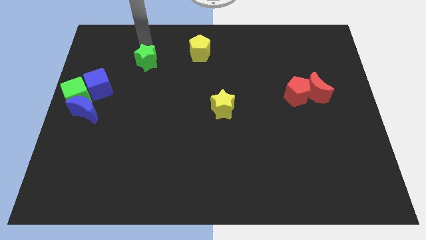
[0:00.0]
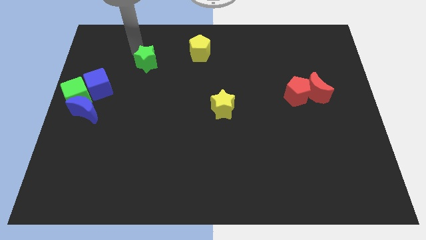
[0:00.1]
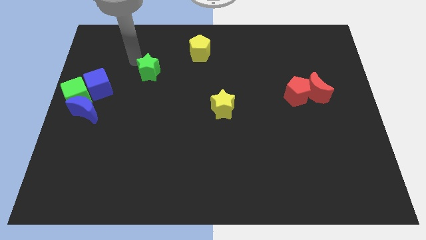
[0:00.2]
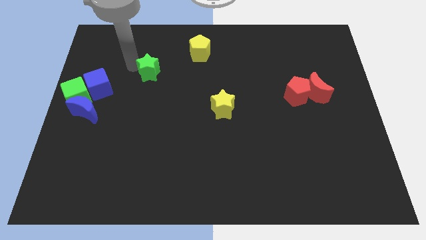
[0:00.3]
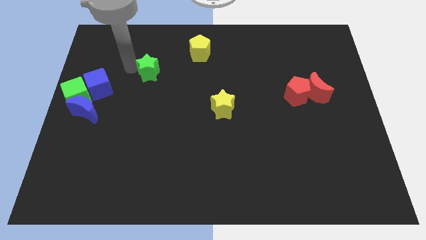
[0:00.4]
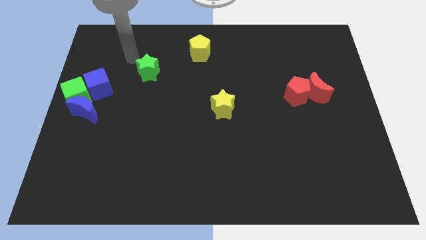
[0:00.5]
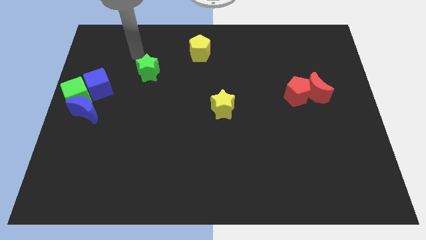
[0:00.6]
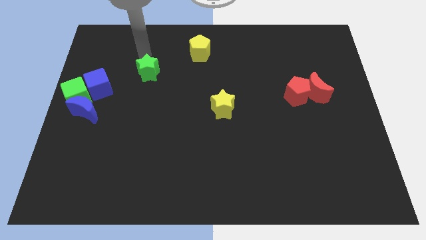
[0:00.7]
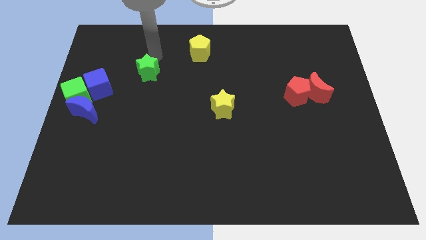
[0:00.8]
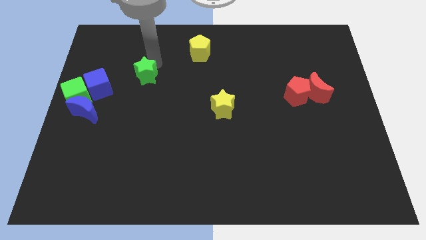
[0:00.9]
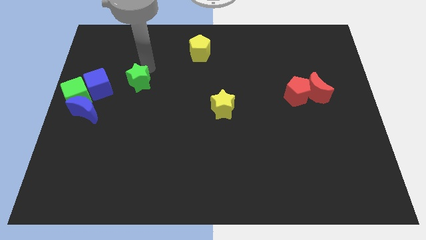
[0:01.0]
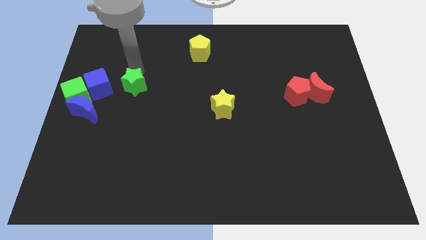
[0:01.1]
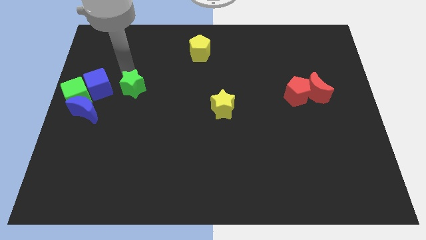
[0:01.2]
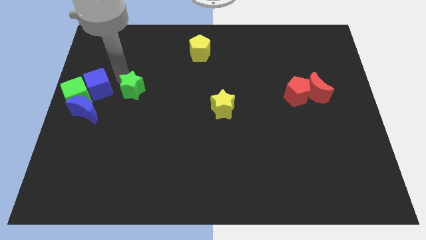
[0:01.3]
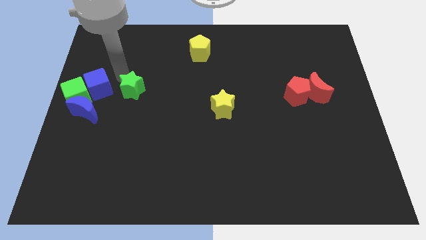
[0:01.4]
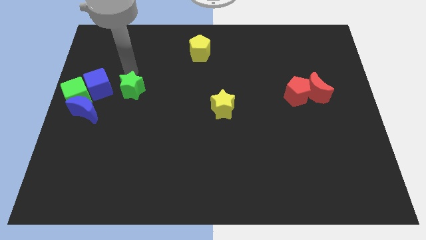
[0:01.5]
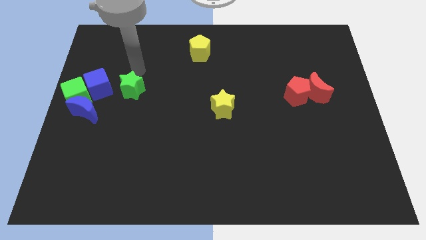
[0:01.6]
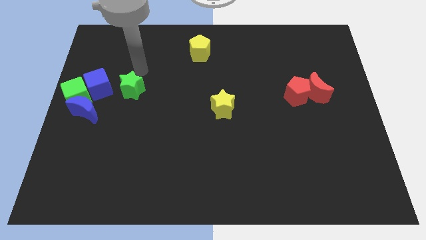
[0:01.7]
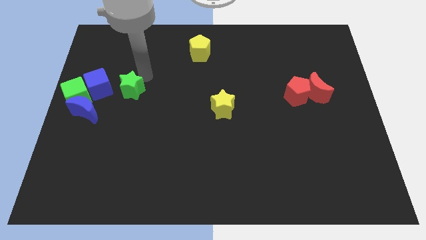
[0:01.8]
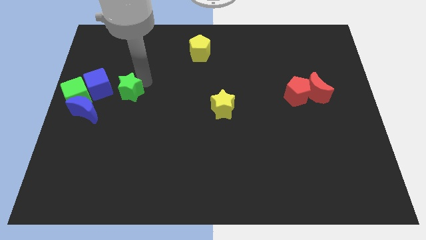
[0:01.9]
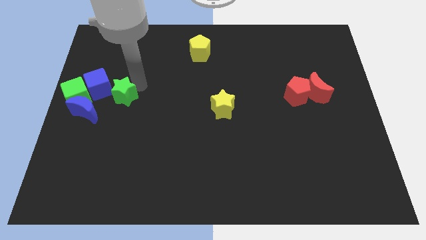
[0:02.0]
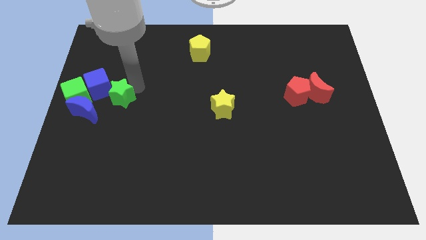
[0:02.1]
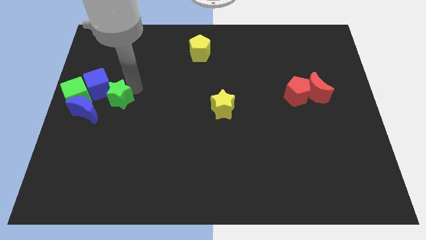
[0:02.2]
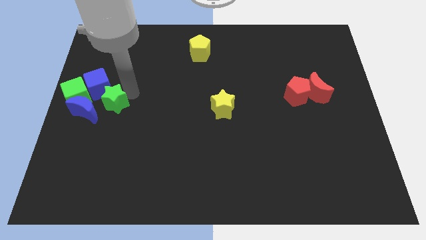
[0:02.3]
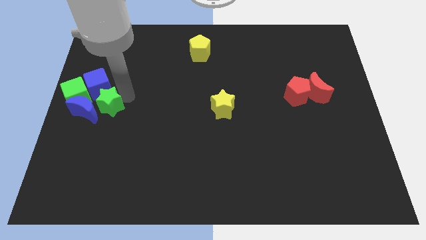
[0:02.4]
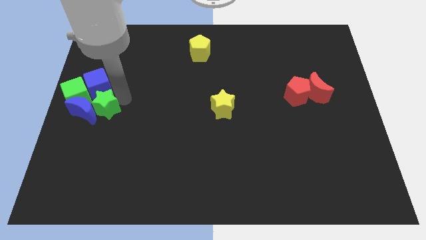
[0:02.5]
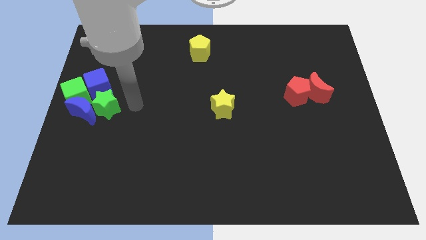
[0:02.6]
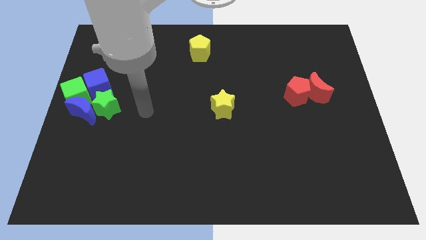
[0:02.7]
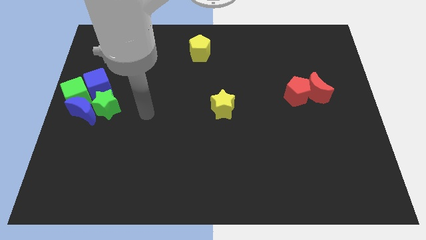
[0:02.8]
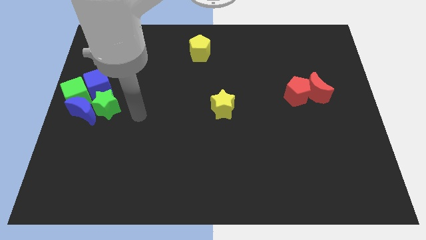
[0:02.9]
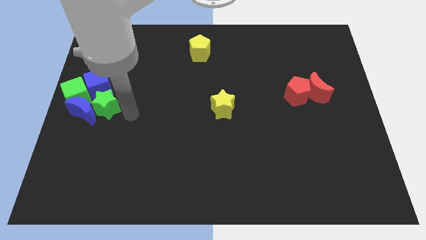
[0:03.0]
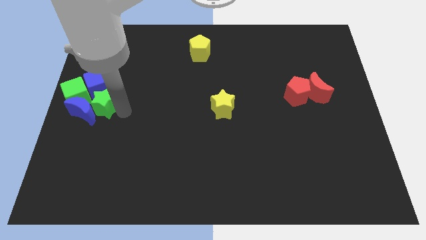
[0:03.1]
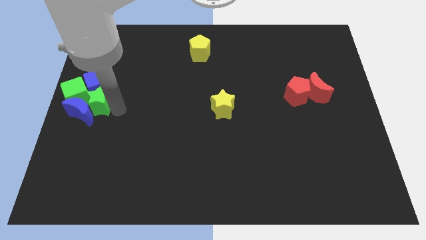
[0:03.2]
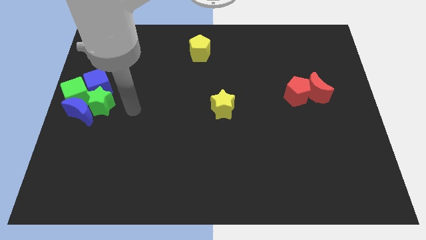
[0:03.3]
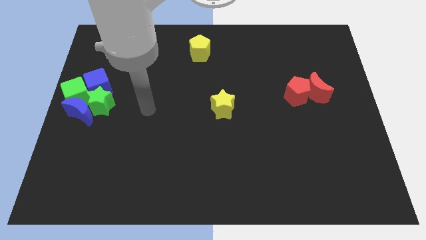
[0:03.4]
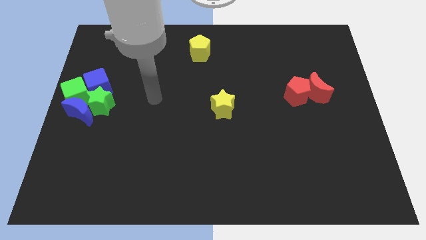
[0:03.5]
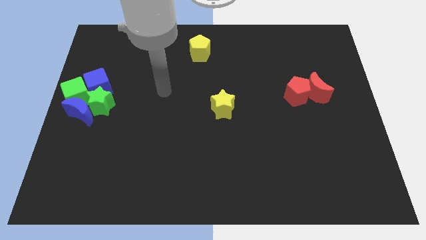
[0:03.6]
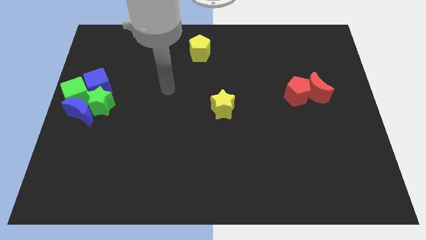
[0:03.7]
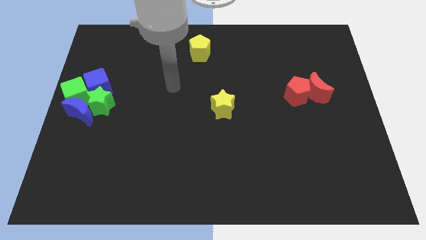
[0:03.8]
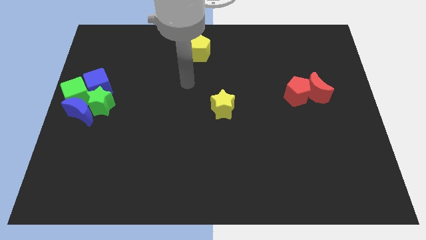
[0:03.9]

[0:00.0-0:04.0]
place green star below blue cube

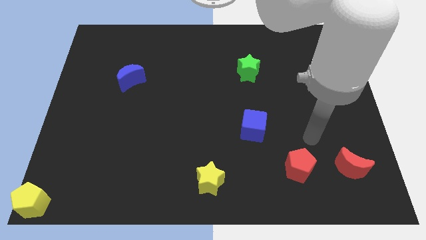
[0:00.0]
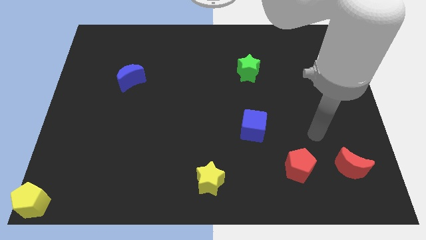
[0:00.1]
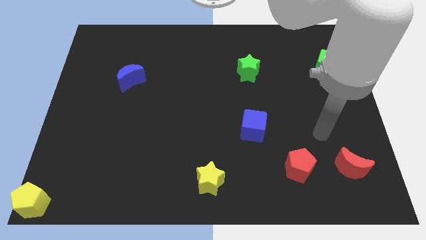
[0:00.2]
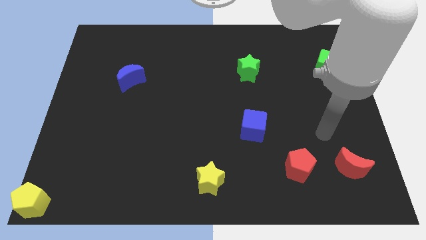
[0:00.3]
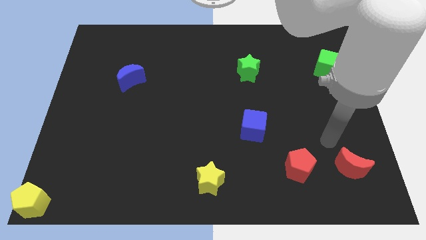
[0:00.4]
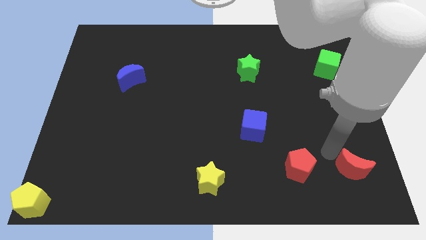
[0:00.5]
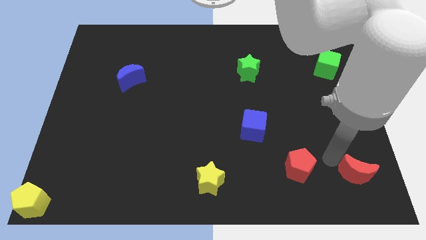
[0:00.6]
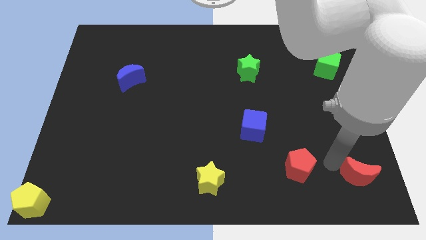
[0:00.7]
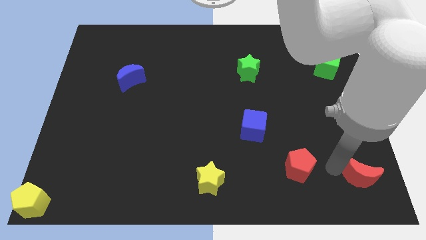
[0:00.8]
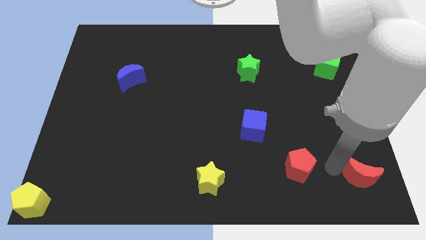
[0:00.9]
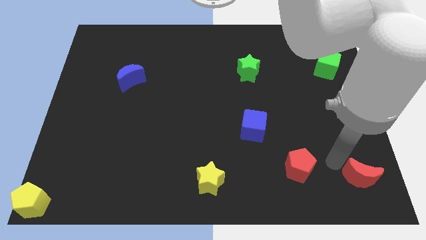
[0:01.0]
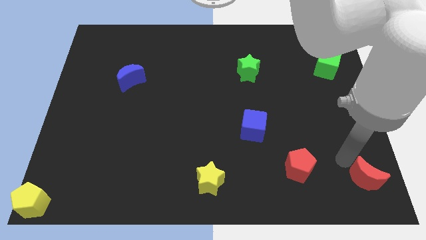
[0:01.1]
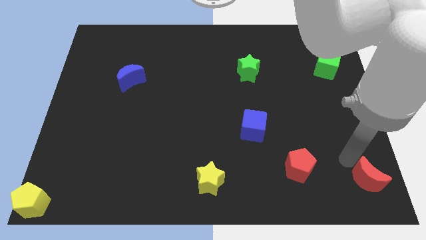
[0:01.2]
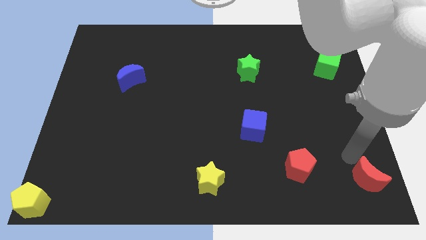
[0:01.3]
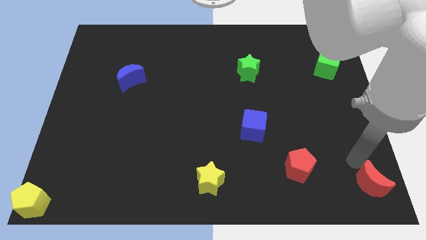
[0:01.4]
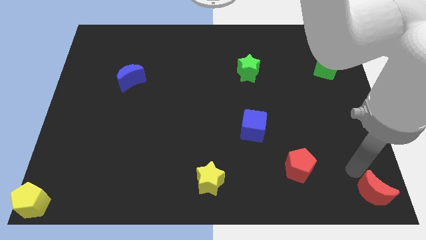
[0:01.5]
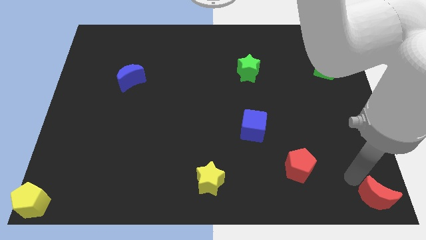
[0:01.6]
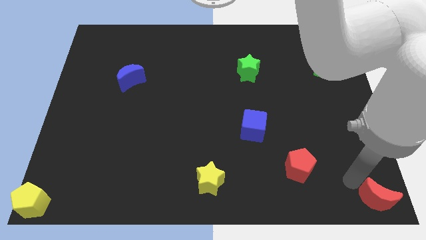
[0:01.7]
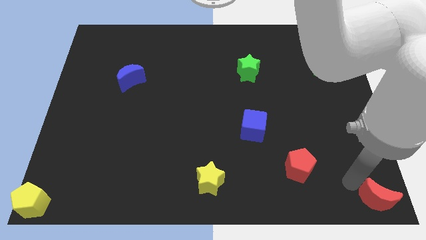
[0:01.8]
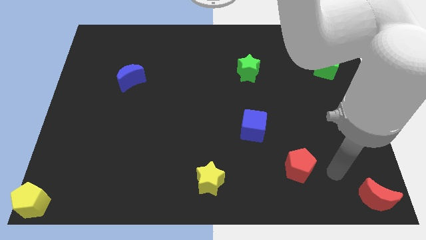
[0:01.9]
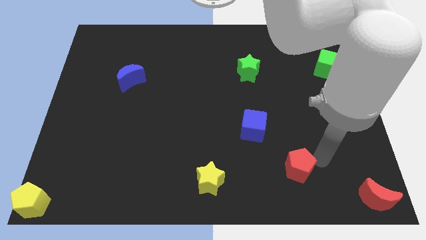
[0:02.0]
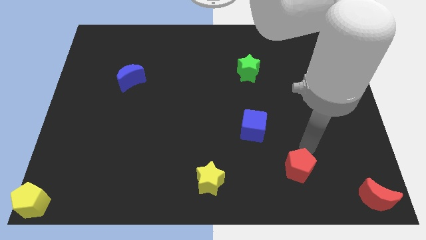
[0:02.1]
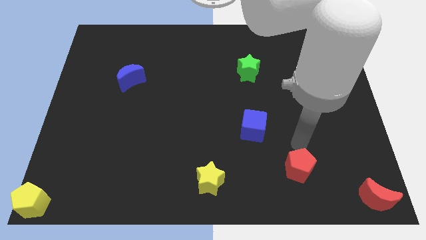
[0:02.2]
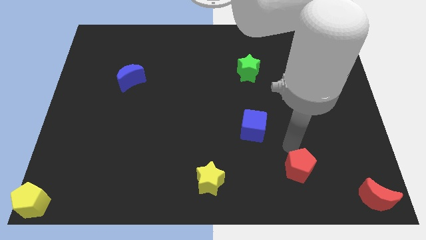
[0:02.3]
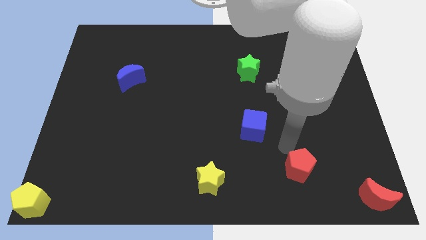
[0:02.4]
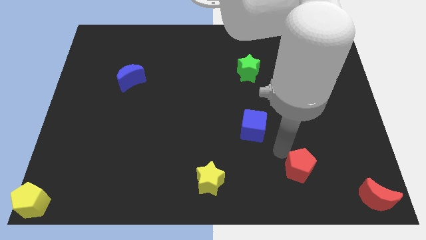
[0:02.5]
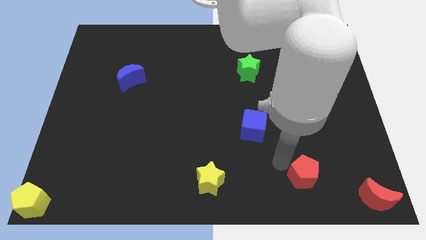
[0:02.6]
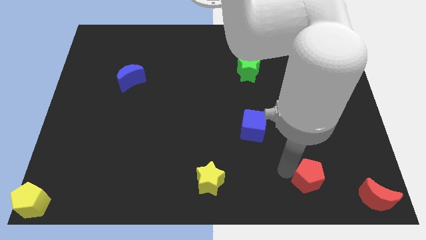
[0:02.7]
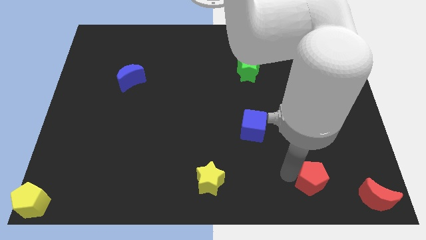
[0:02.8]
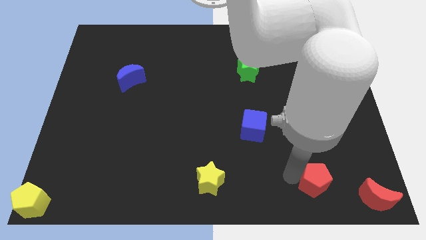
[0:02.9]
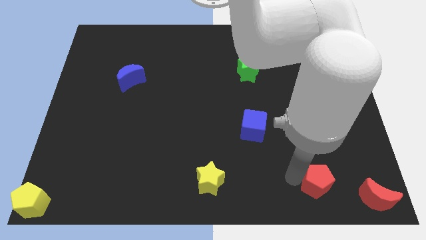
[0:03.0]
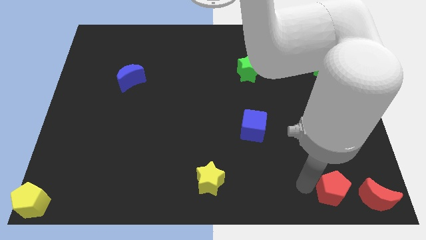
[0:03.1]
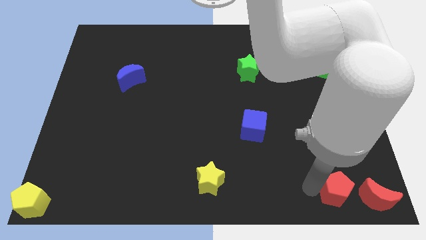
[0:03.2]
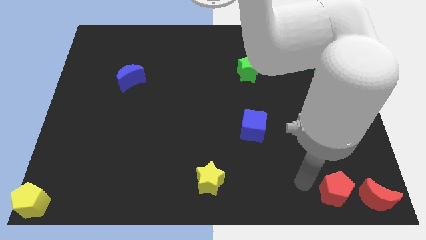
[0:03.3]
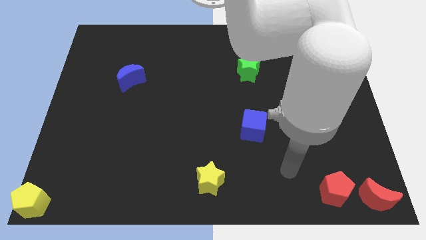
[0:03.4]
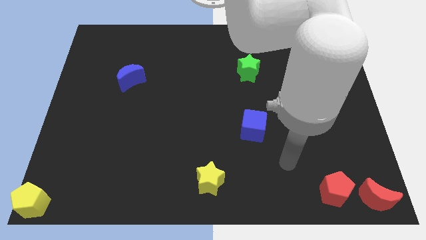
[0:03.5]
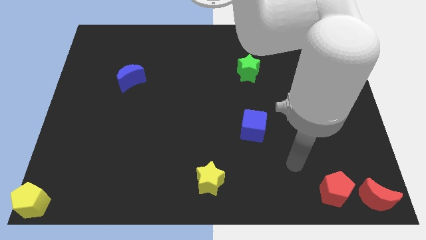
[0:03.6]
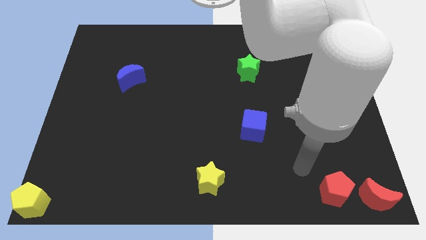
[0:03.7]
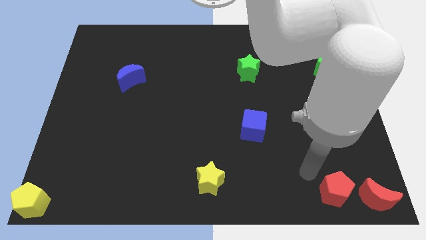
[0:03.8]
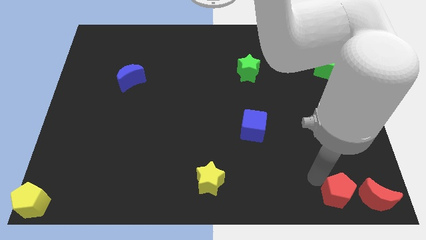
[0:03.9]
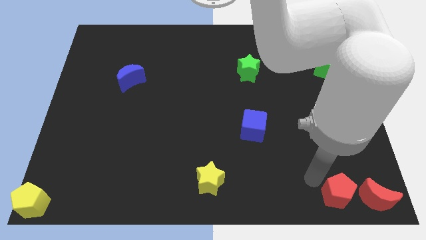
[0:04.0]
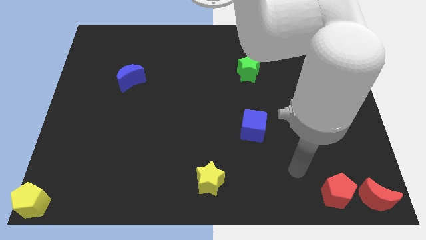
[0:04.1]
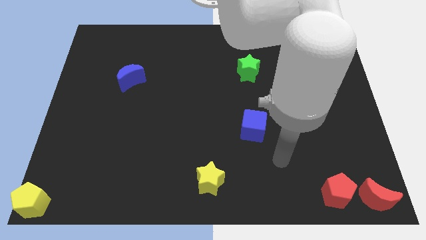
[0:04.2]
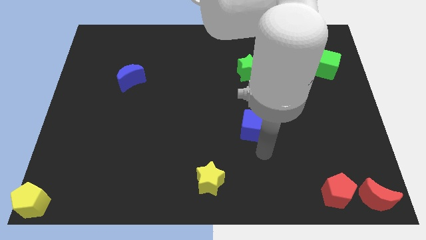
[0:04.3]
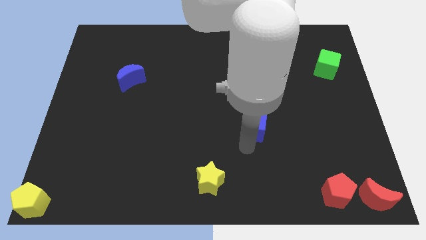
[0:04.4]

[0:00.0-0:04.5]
push the red blocks towards the bottom right side of the board

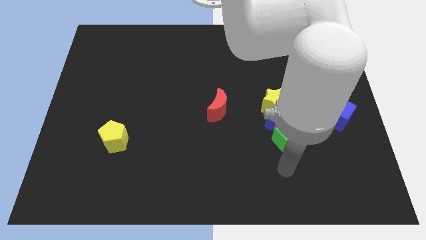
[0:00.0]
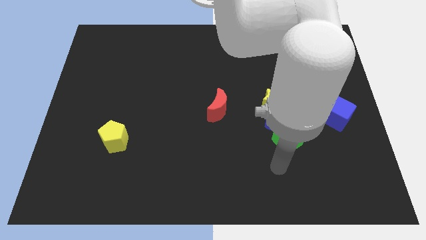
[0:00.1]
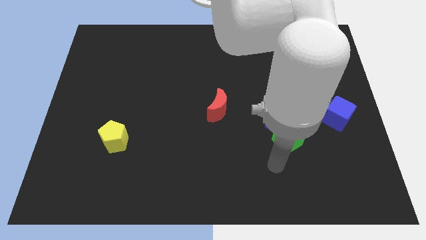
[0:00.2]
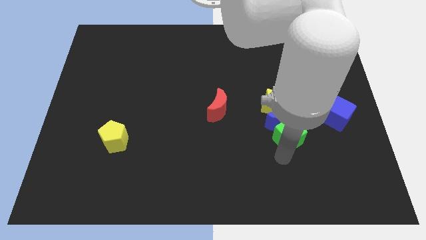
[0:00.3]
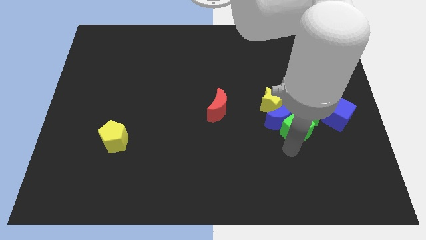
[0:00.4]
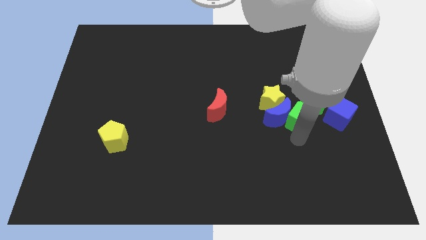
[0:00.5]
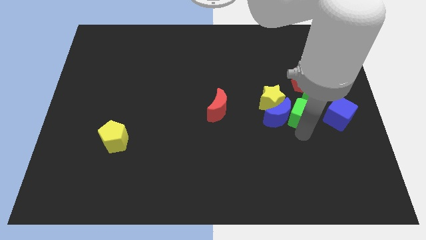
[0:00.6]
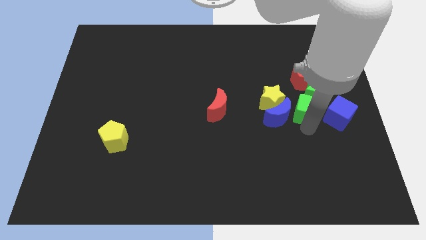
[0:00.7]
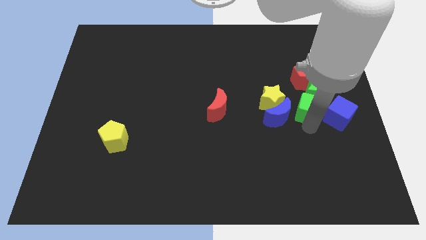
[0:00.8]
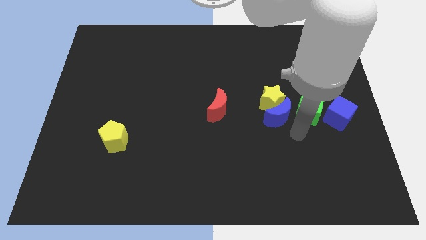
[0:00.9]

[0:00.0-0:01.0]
push the green blocks in between the red pentagon and blue cube
